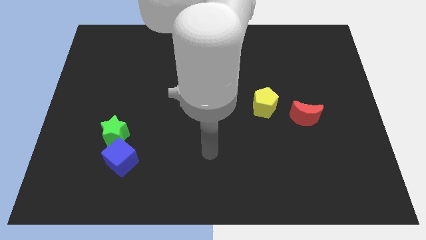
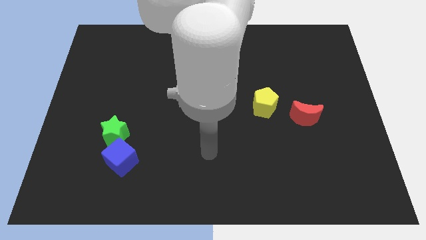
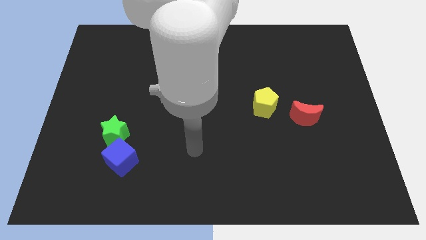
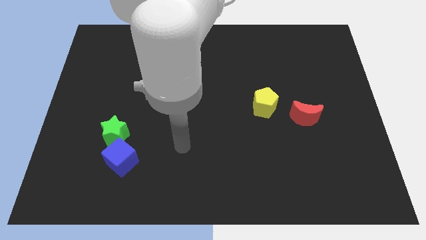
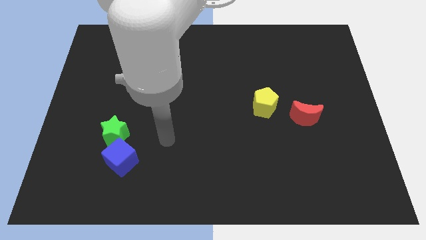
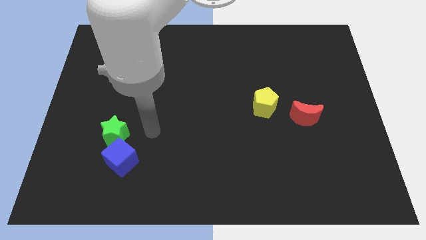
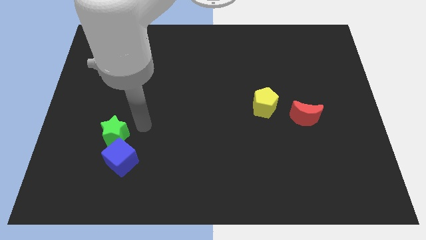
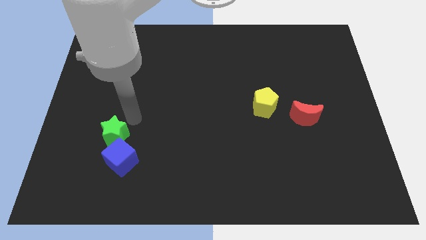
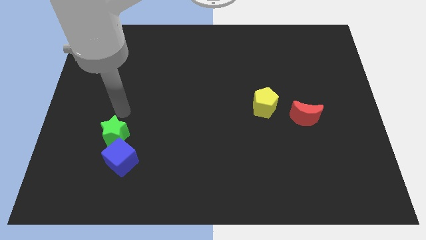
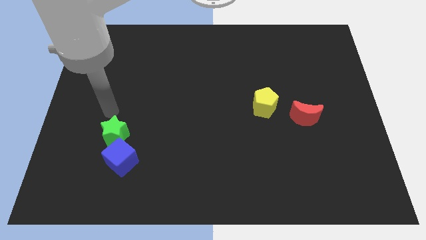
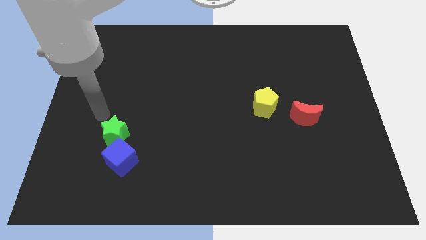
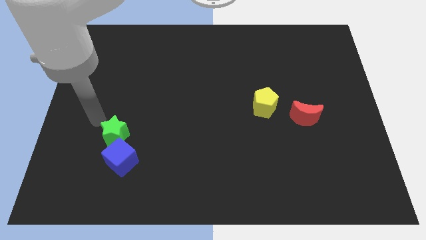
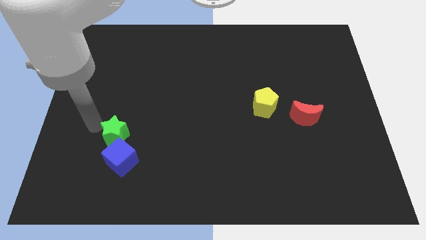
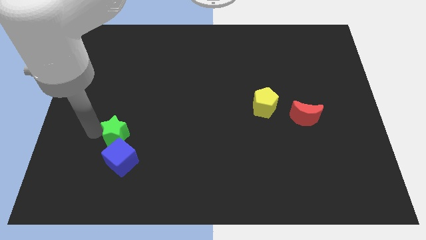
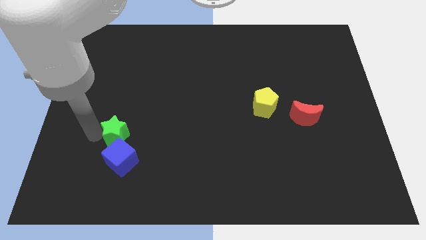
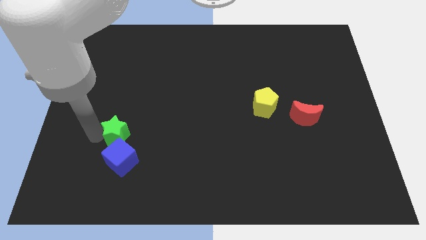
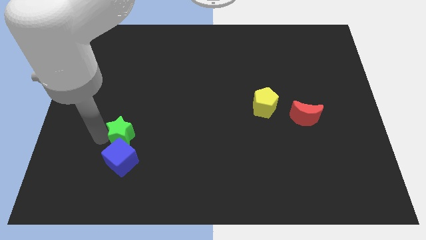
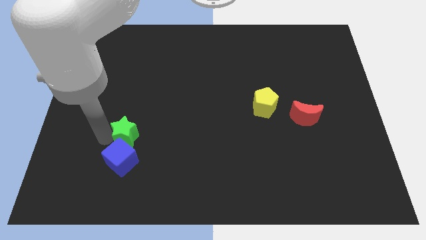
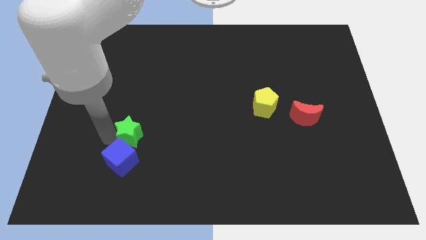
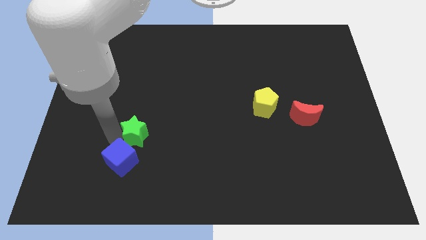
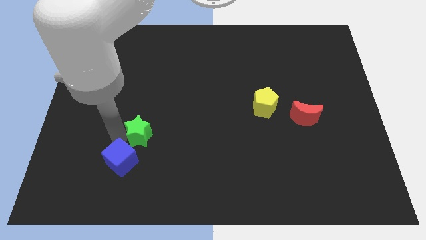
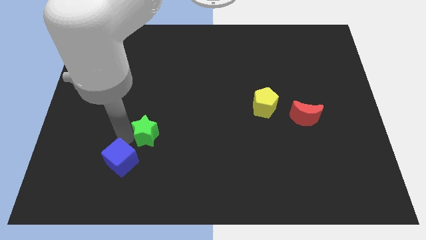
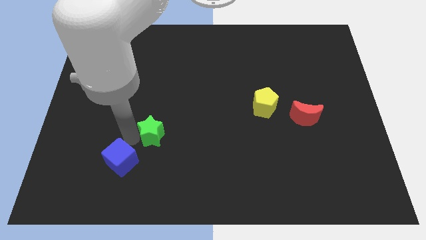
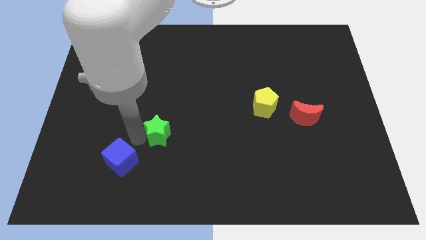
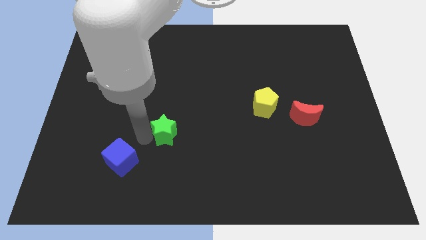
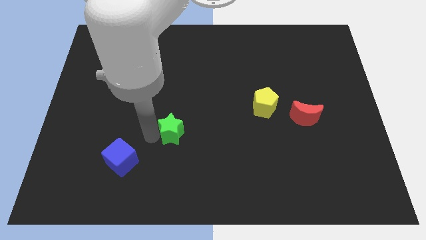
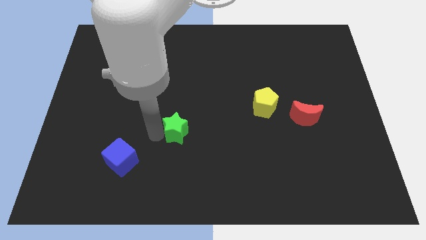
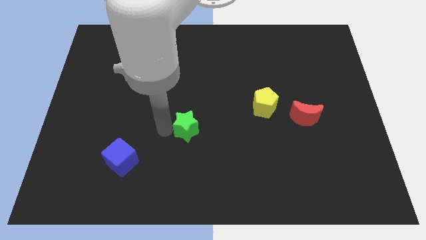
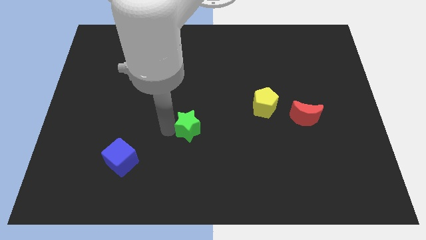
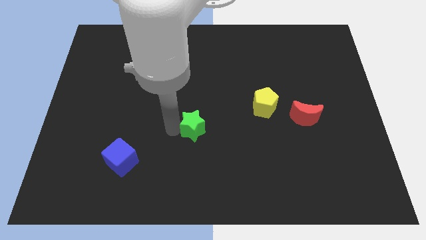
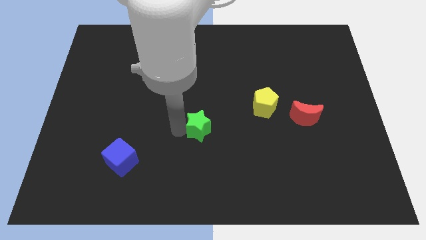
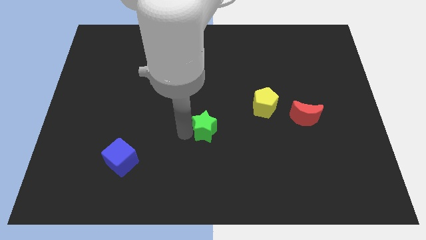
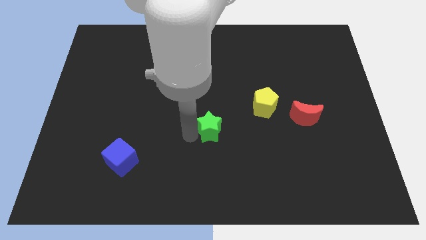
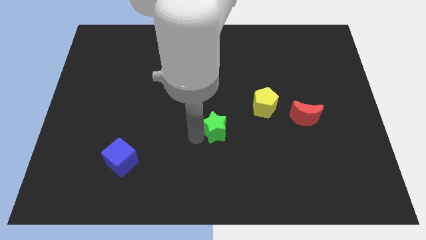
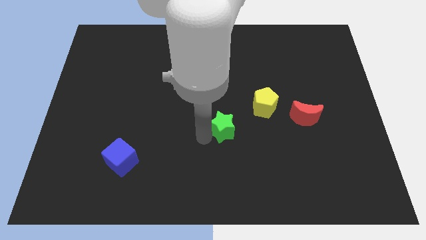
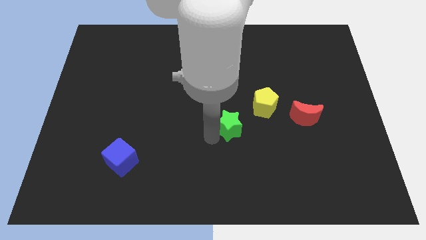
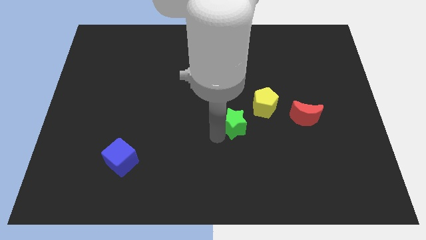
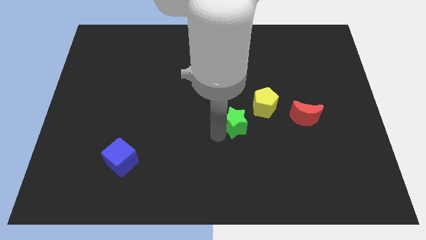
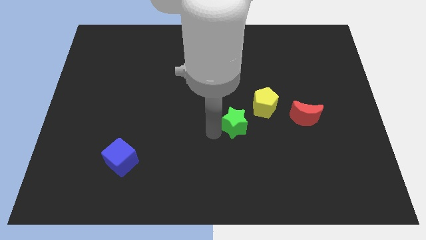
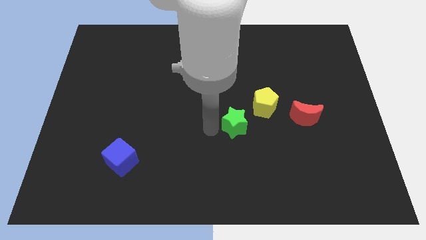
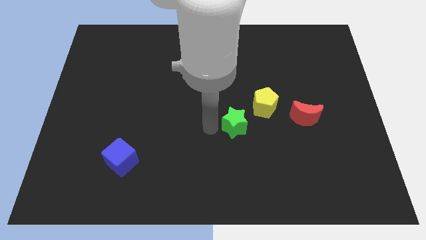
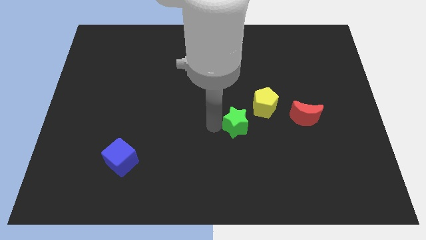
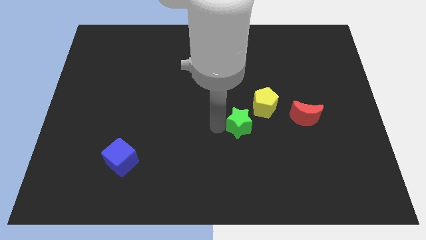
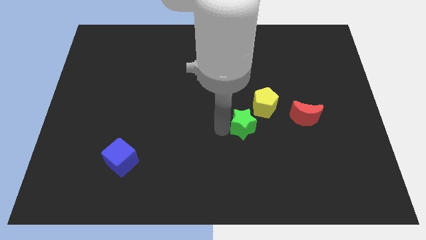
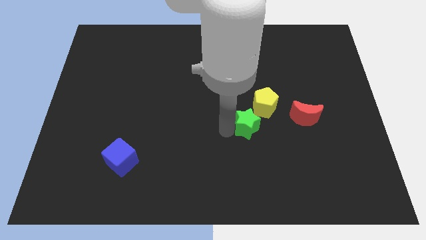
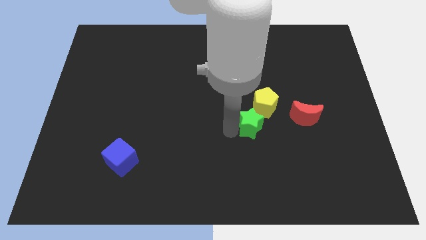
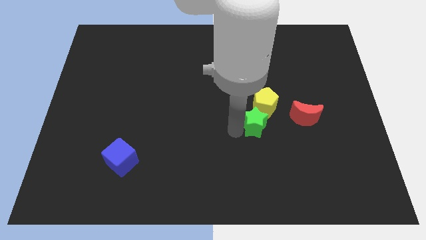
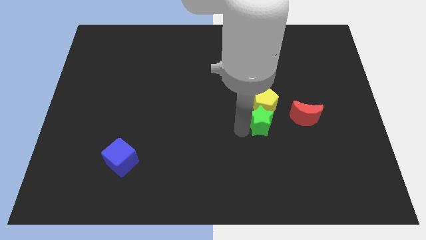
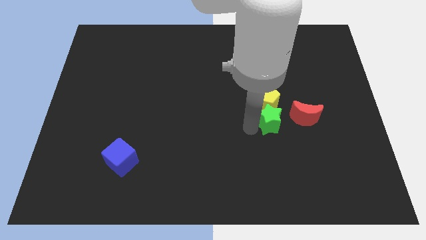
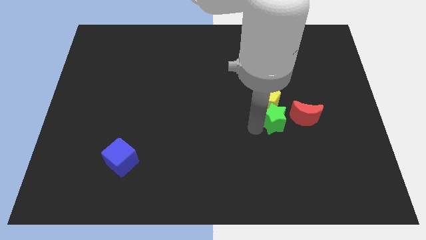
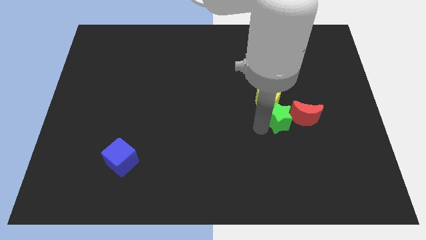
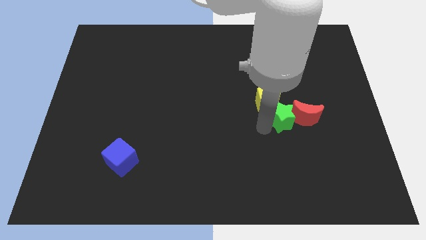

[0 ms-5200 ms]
push the star close to the moon

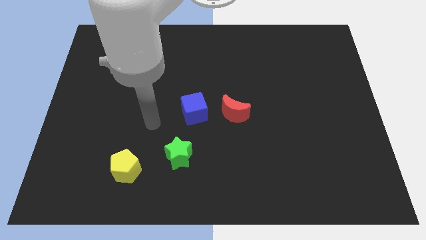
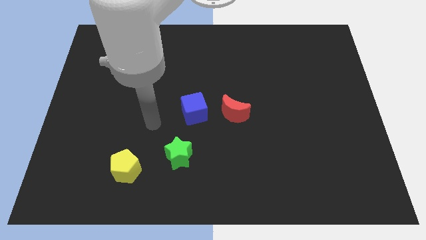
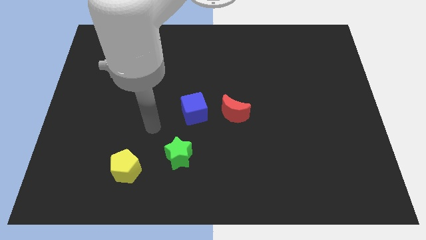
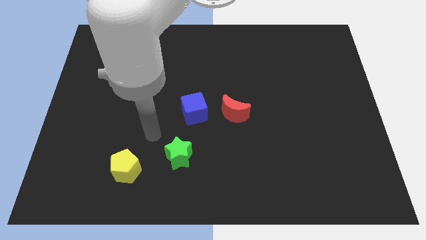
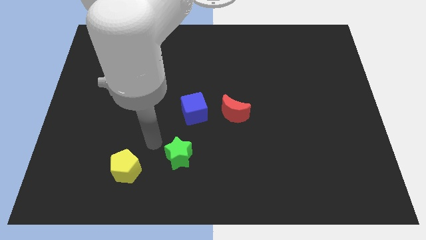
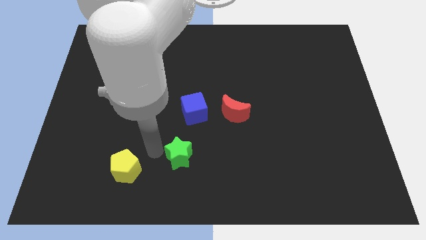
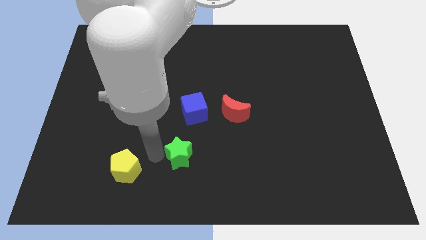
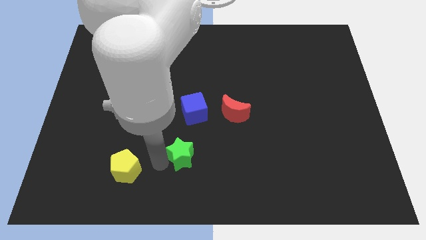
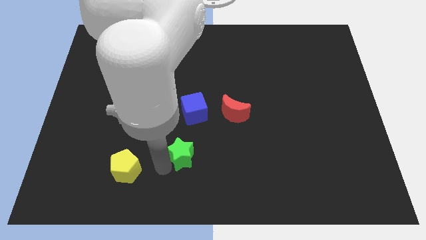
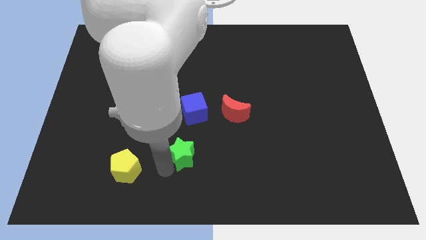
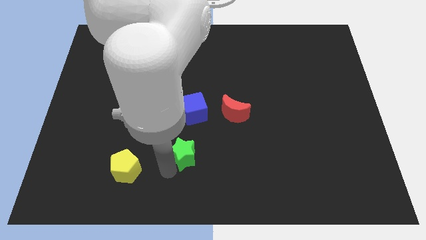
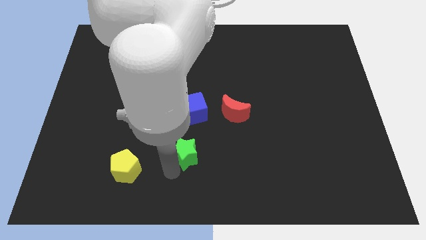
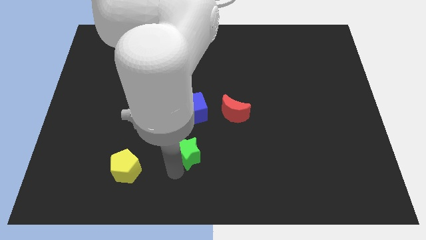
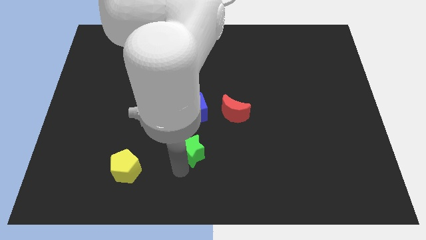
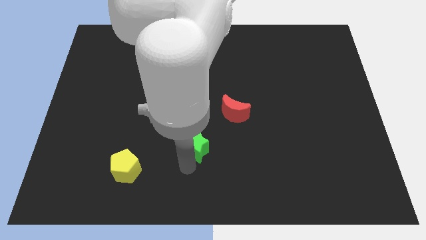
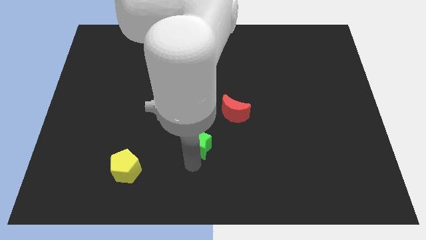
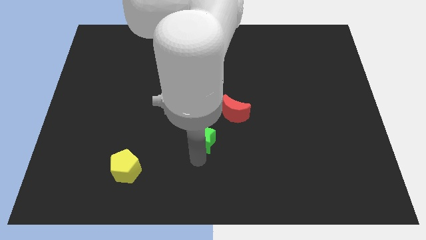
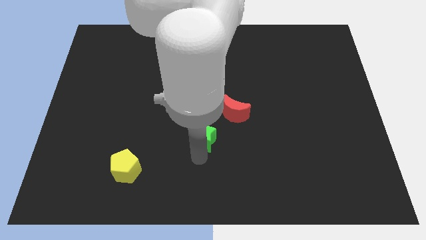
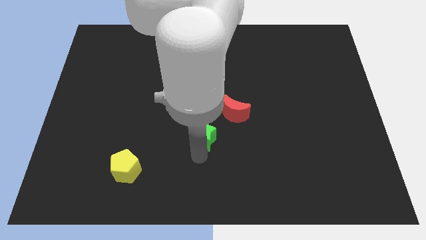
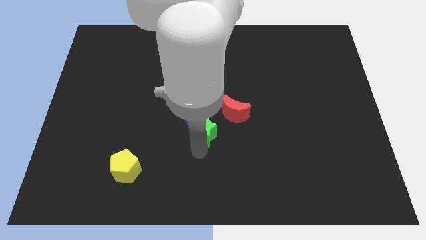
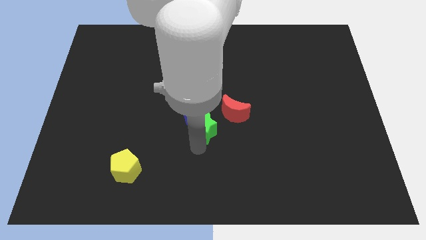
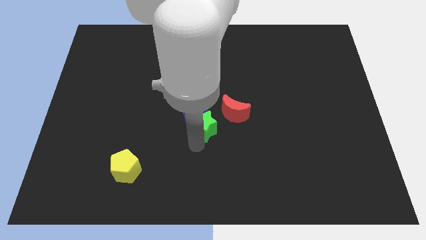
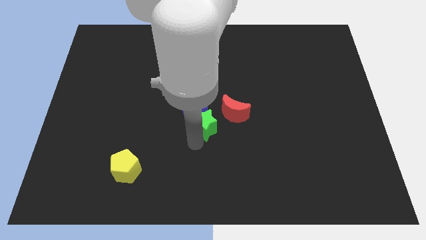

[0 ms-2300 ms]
slide the green block towards the blue block

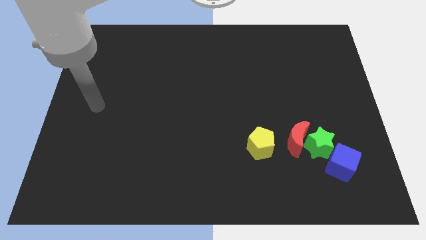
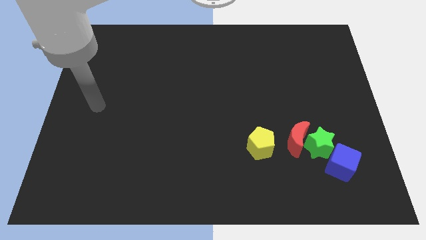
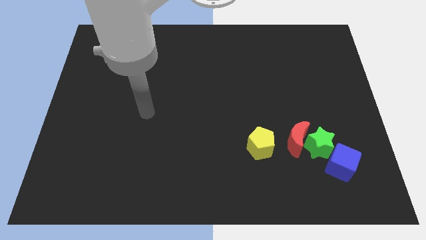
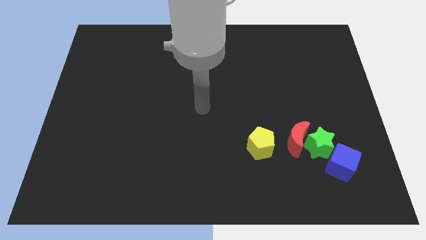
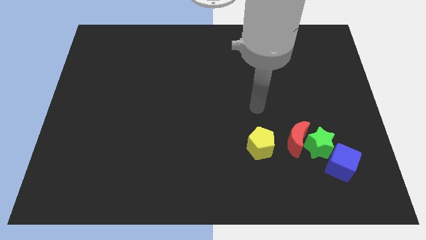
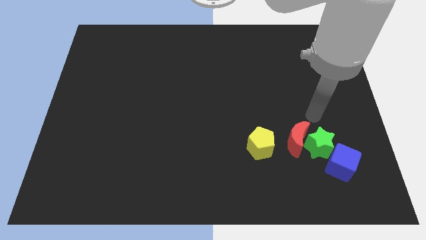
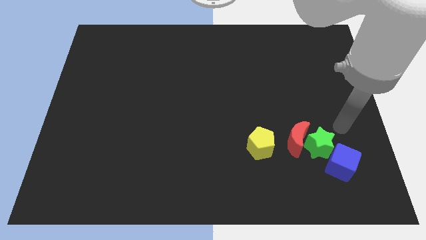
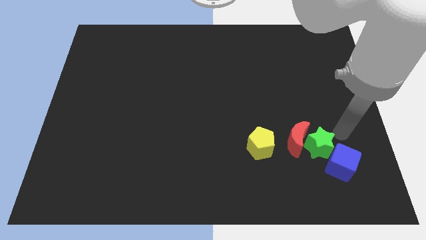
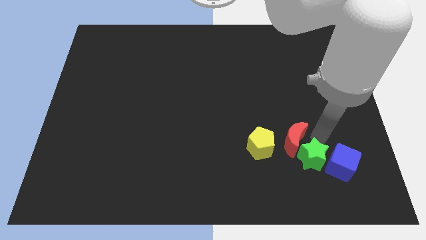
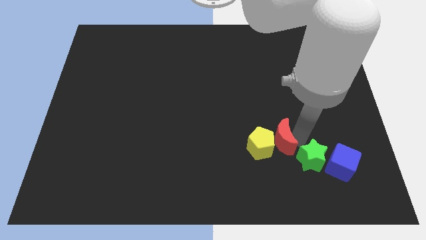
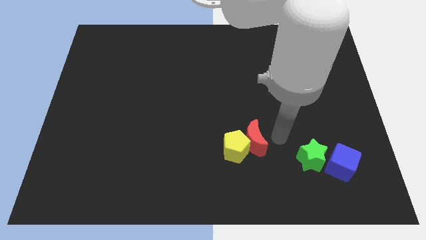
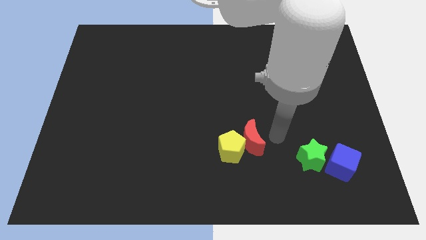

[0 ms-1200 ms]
move the red block close to the yellow block
